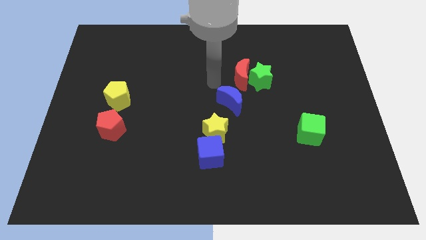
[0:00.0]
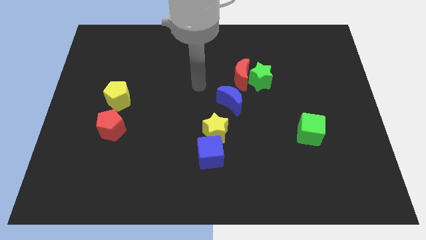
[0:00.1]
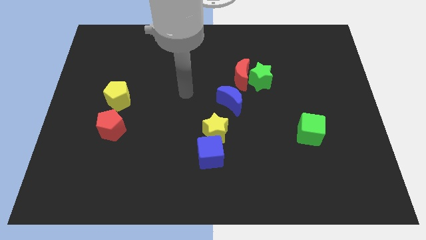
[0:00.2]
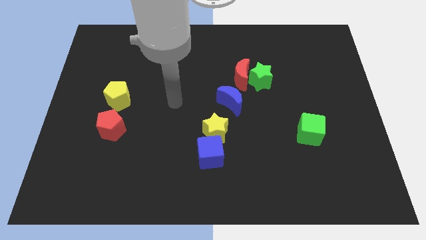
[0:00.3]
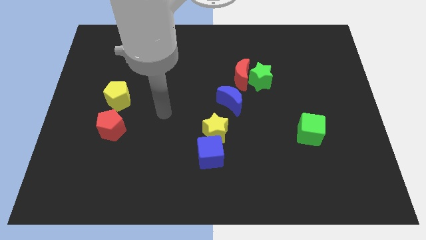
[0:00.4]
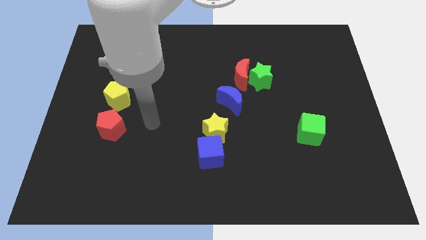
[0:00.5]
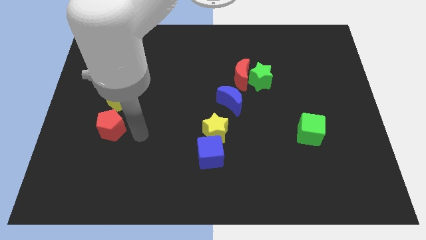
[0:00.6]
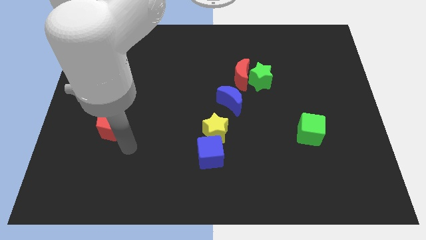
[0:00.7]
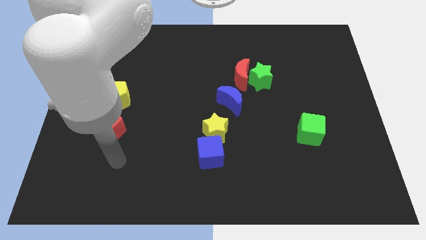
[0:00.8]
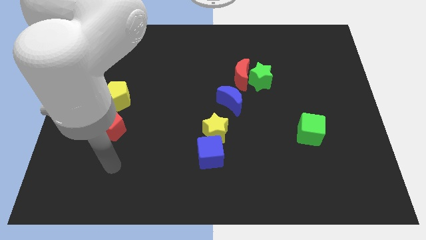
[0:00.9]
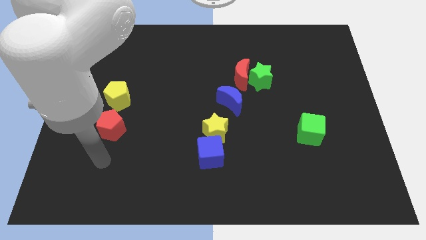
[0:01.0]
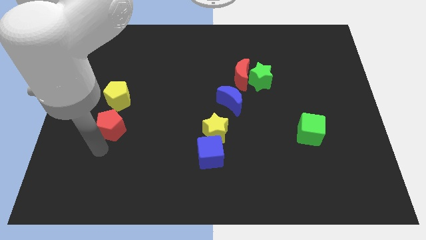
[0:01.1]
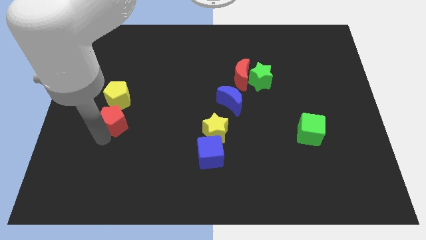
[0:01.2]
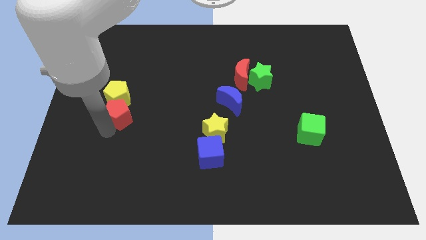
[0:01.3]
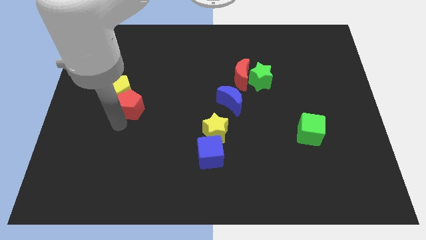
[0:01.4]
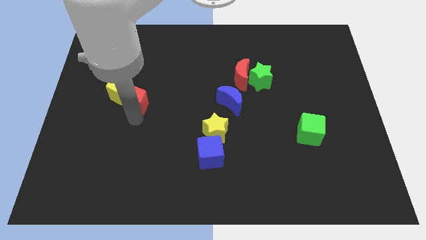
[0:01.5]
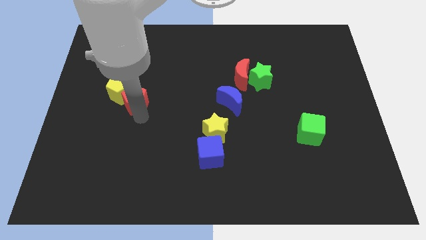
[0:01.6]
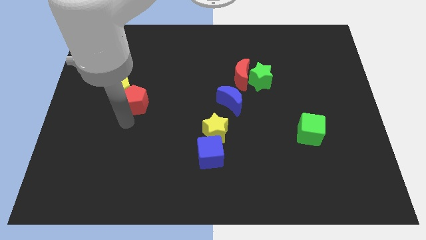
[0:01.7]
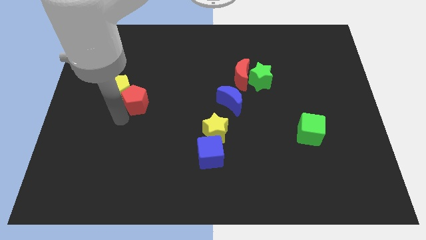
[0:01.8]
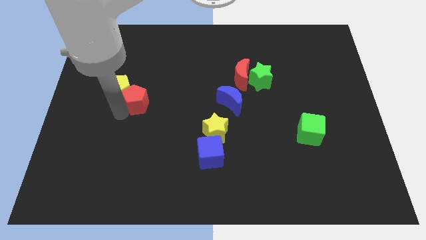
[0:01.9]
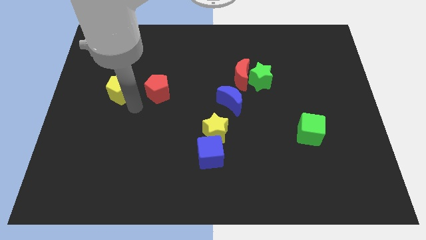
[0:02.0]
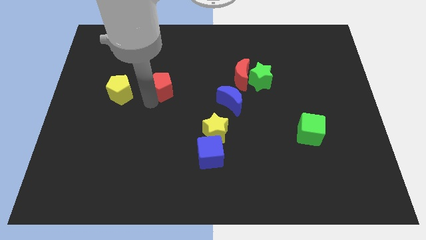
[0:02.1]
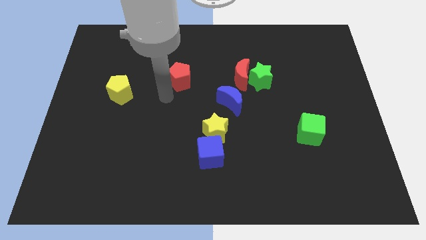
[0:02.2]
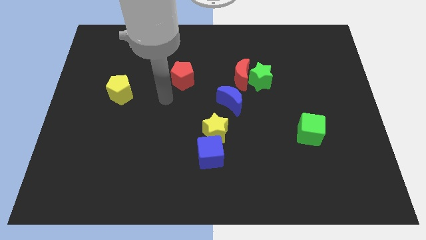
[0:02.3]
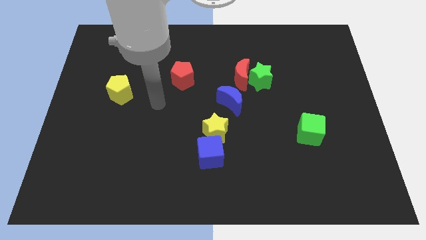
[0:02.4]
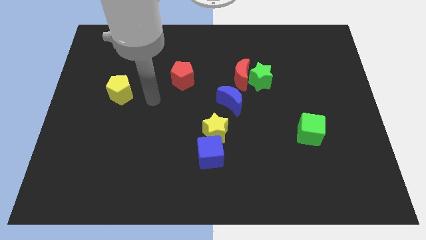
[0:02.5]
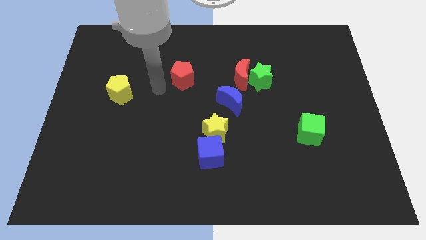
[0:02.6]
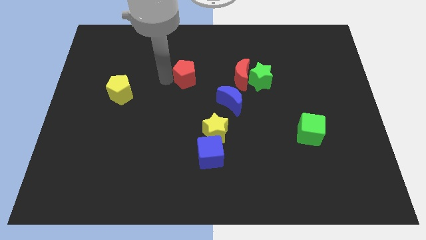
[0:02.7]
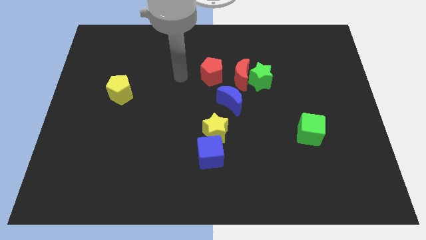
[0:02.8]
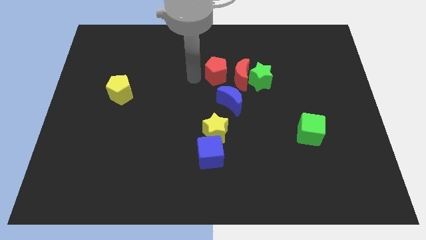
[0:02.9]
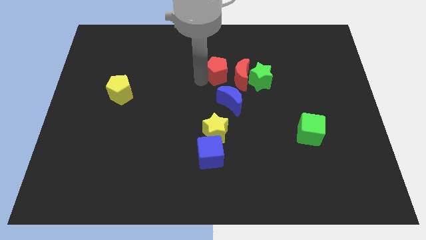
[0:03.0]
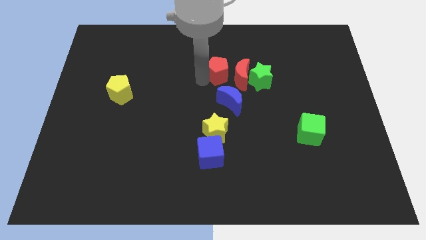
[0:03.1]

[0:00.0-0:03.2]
move the red pentagon to the left of the red crescent

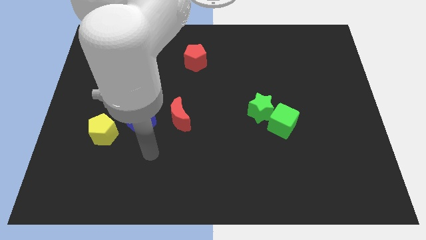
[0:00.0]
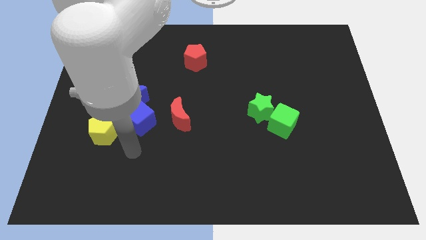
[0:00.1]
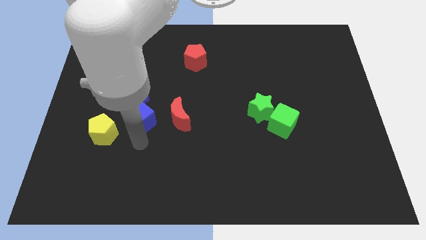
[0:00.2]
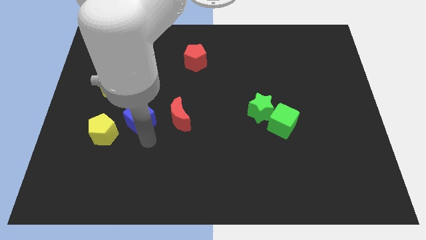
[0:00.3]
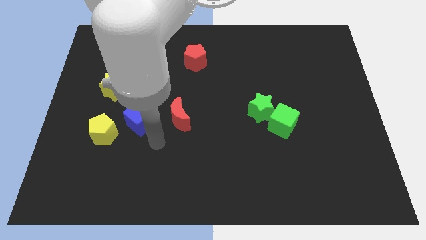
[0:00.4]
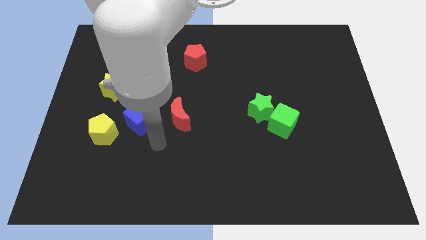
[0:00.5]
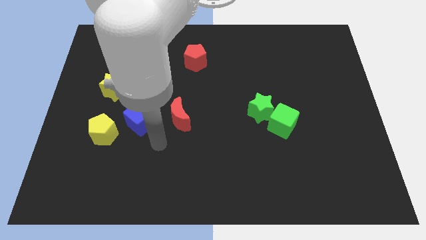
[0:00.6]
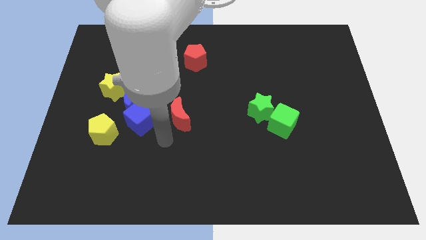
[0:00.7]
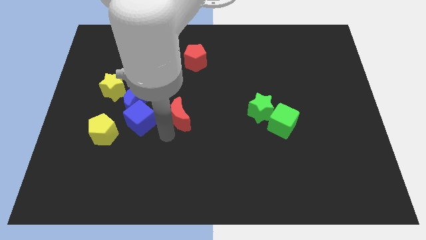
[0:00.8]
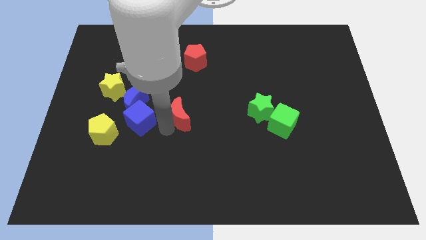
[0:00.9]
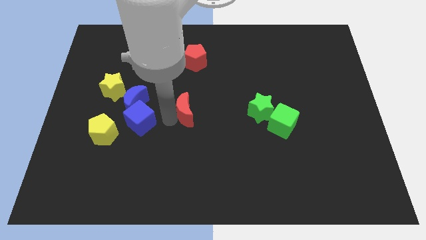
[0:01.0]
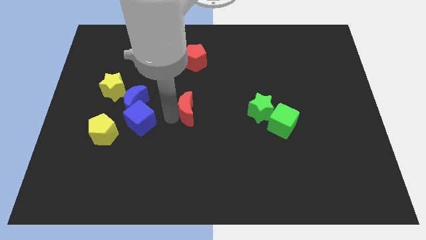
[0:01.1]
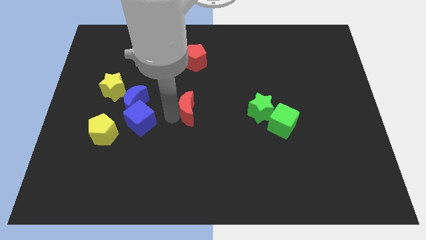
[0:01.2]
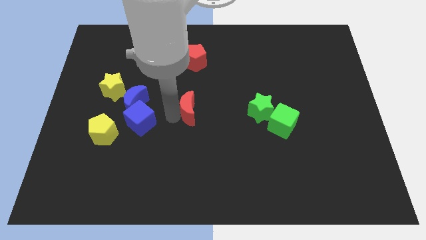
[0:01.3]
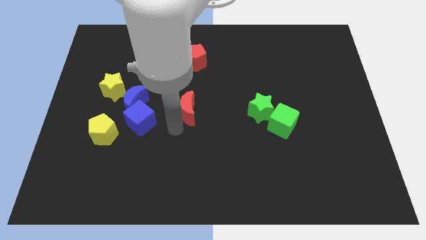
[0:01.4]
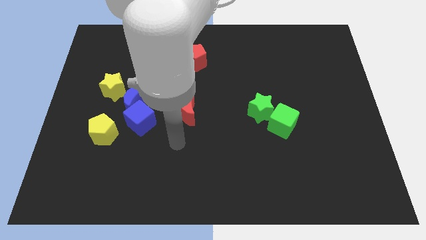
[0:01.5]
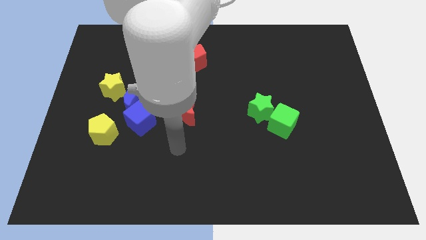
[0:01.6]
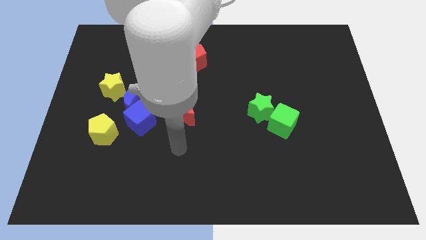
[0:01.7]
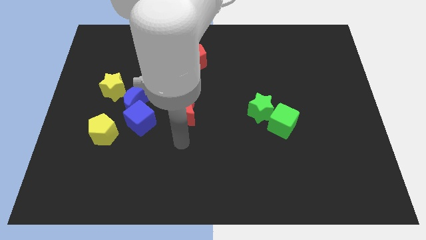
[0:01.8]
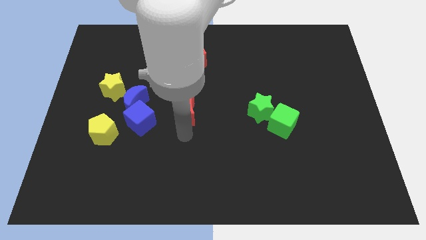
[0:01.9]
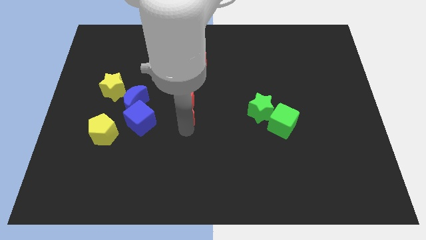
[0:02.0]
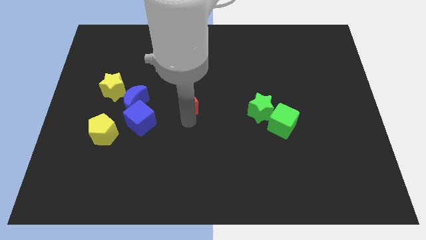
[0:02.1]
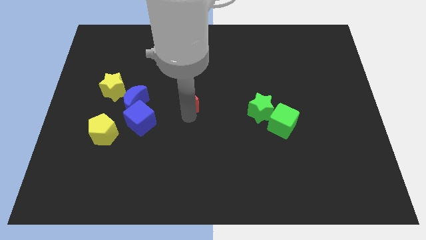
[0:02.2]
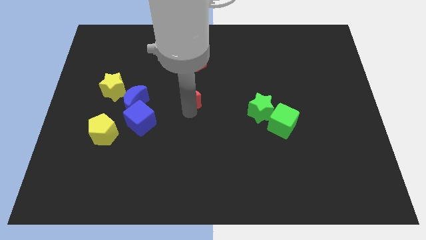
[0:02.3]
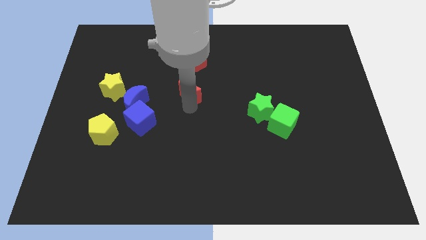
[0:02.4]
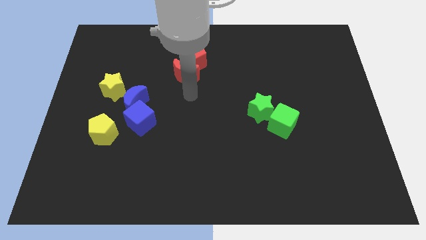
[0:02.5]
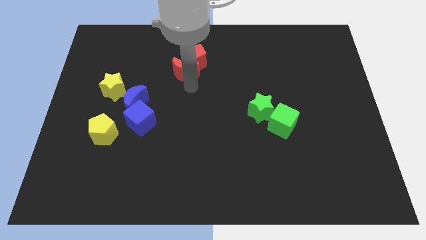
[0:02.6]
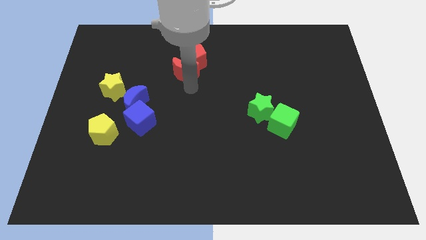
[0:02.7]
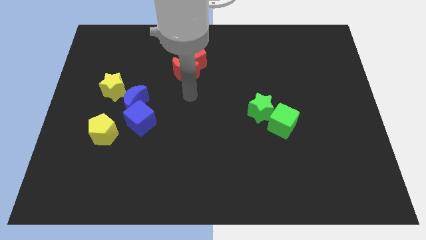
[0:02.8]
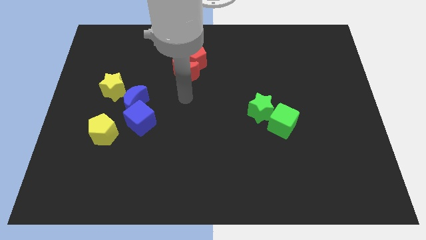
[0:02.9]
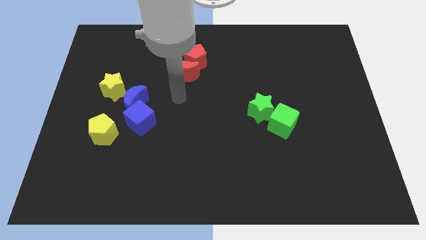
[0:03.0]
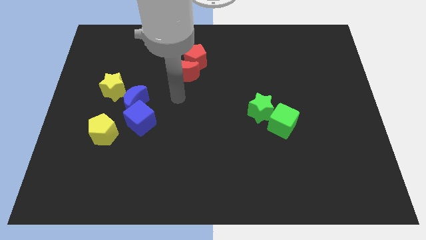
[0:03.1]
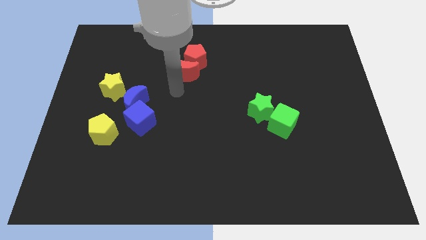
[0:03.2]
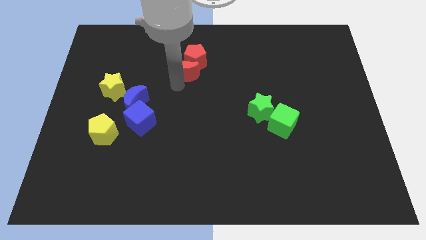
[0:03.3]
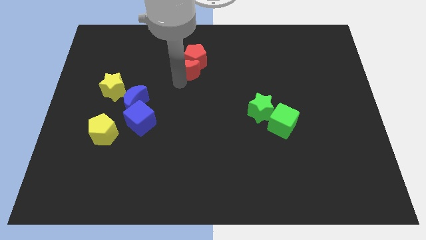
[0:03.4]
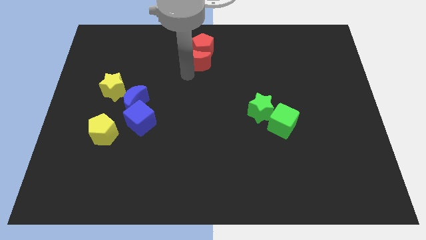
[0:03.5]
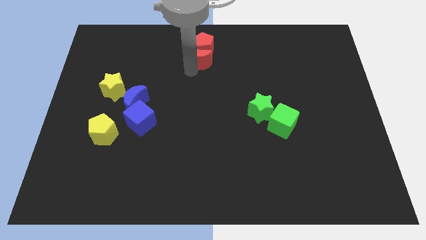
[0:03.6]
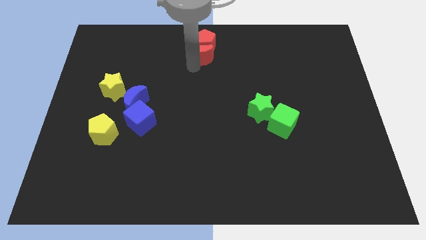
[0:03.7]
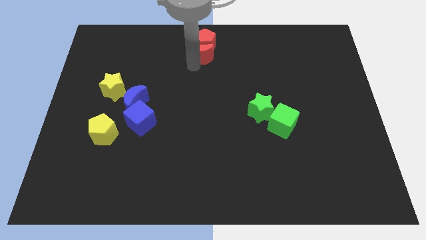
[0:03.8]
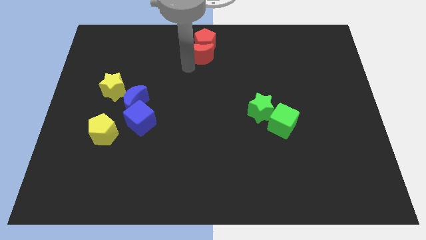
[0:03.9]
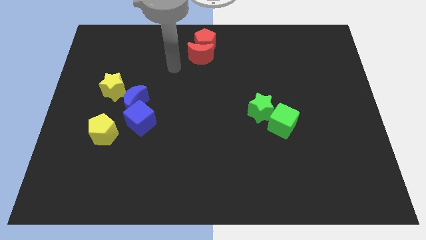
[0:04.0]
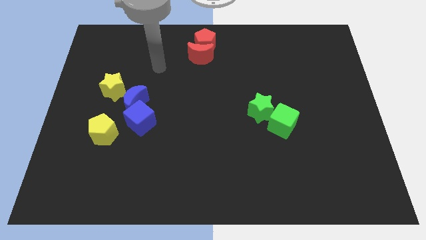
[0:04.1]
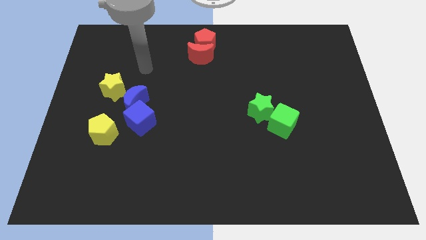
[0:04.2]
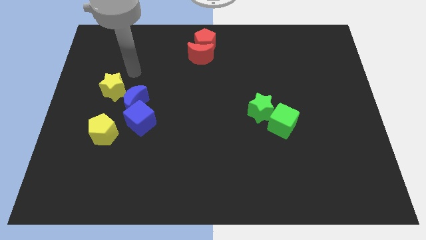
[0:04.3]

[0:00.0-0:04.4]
push the red pentagon with red crescent to the top center of the board

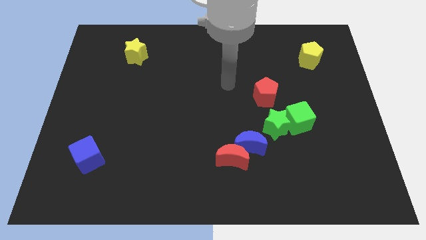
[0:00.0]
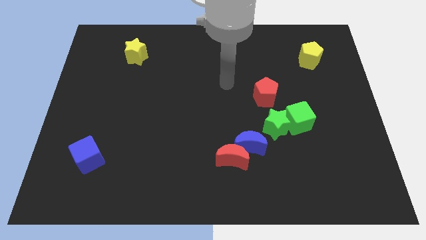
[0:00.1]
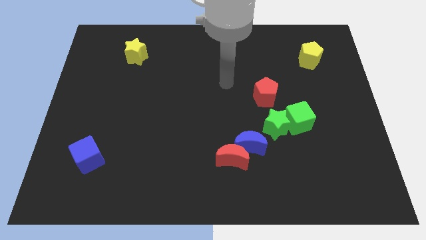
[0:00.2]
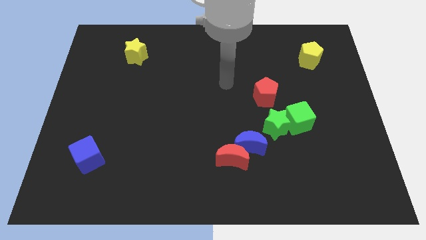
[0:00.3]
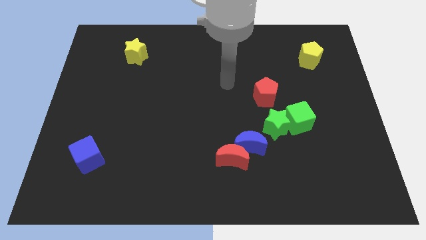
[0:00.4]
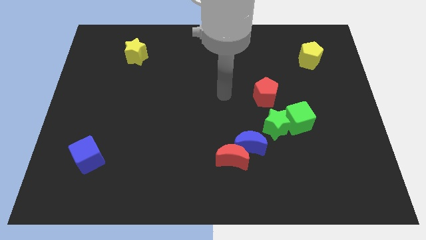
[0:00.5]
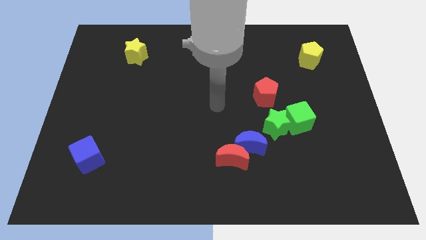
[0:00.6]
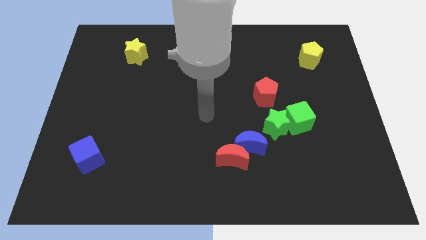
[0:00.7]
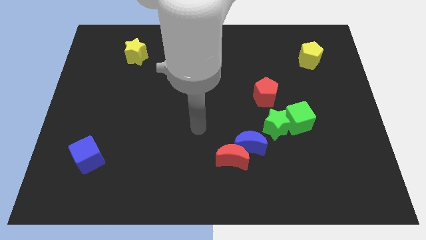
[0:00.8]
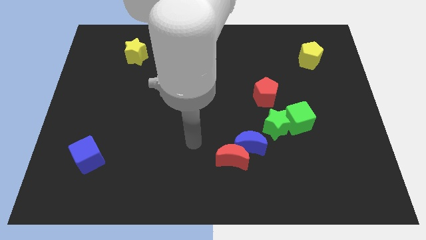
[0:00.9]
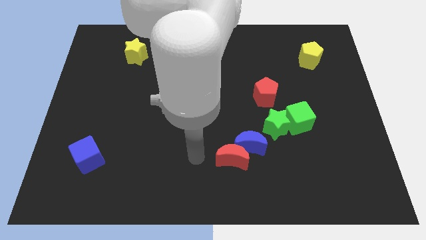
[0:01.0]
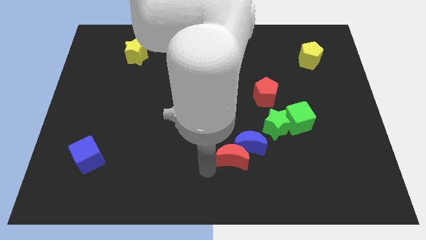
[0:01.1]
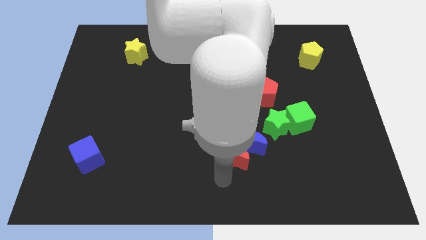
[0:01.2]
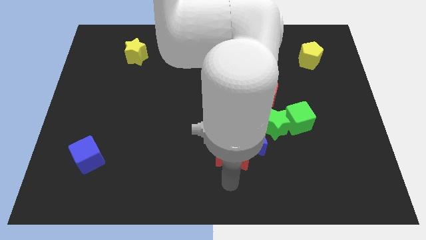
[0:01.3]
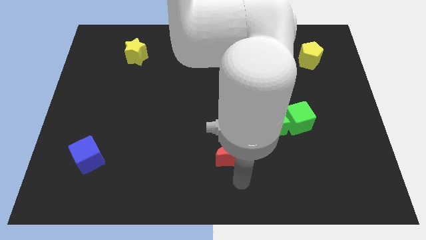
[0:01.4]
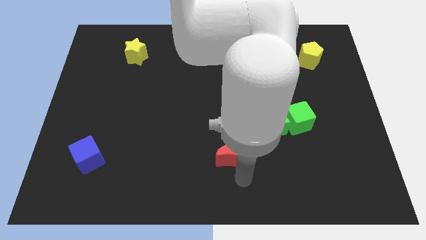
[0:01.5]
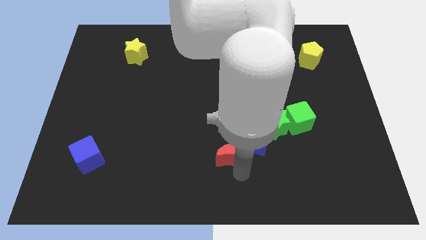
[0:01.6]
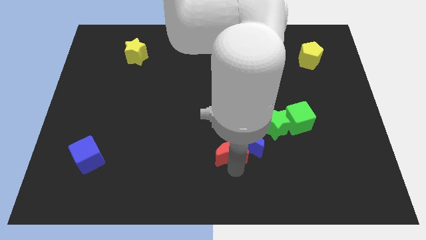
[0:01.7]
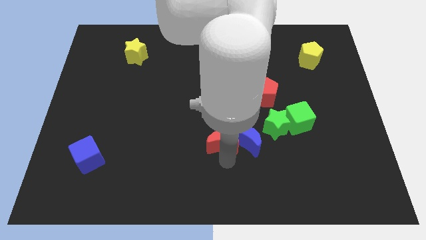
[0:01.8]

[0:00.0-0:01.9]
move your arm on the left side of the red crescent
